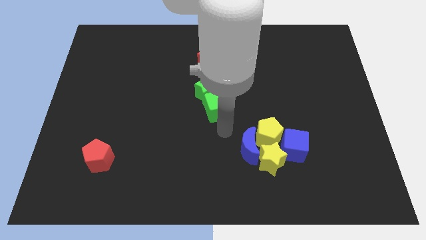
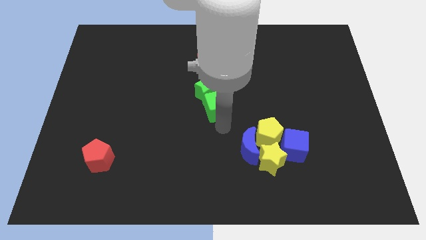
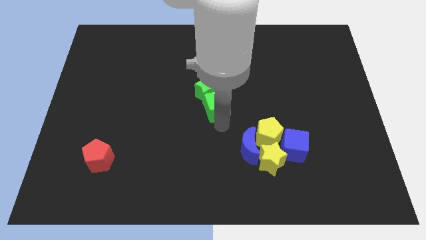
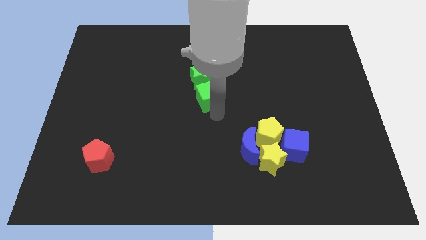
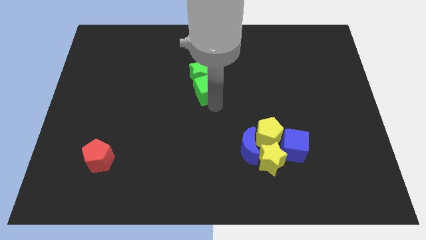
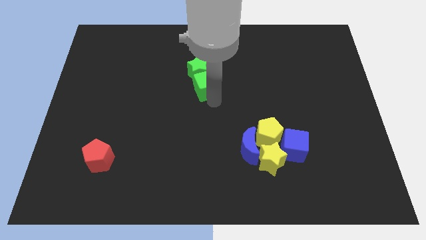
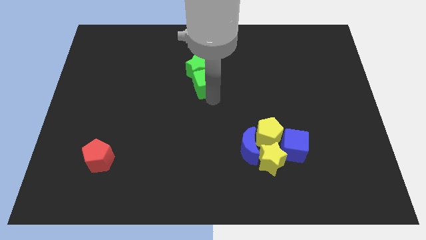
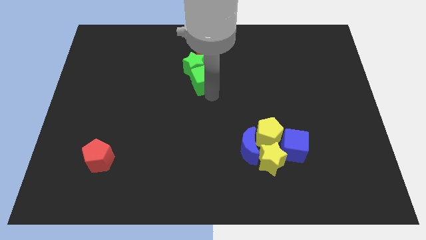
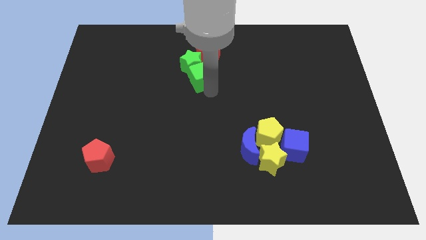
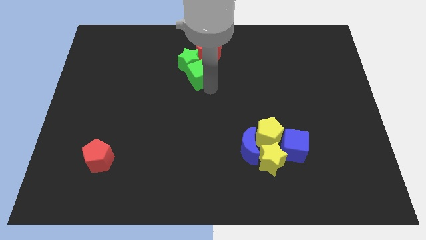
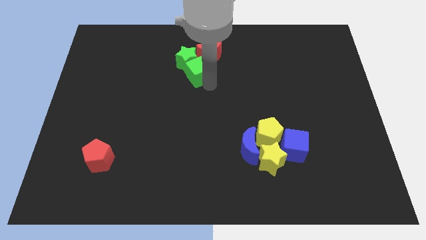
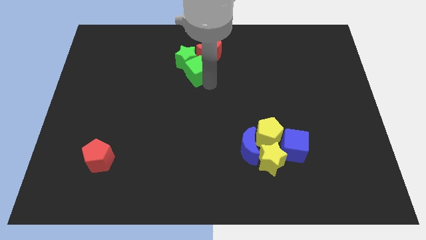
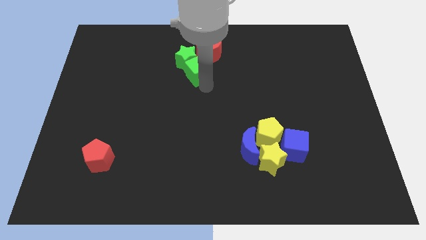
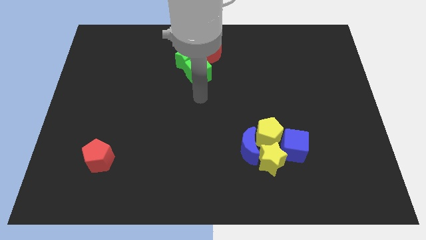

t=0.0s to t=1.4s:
push the green star towards the top center with the green cube

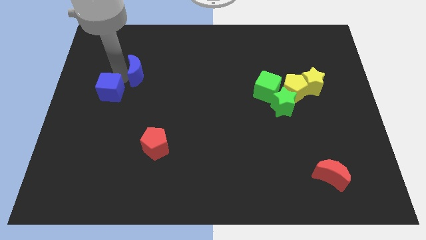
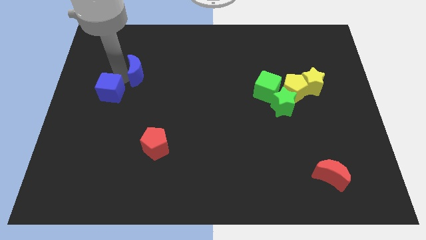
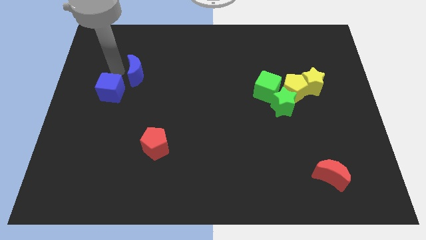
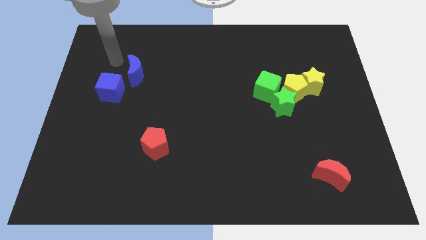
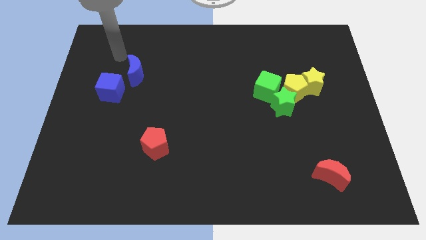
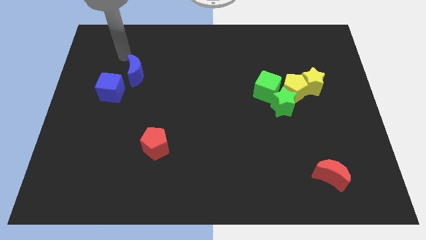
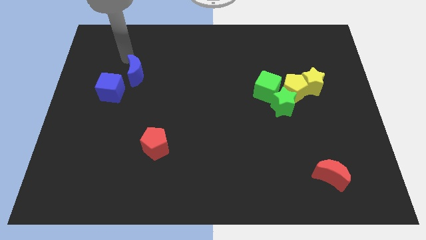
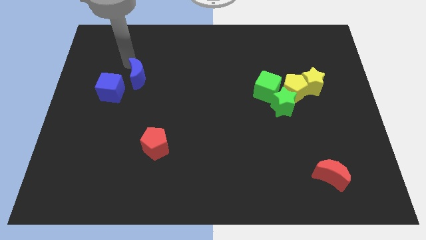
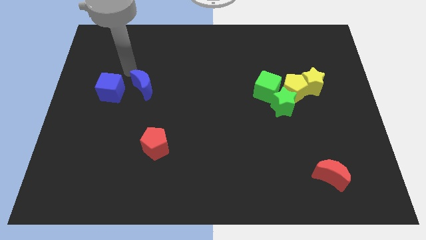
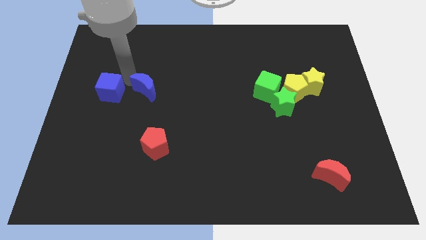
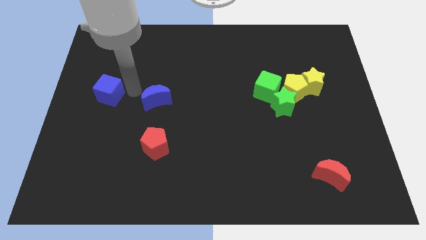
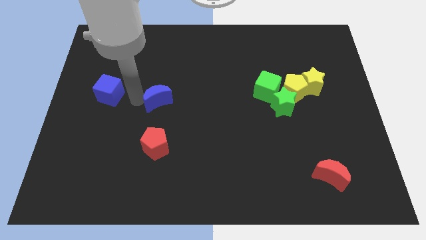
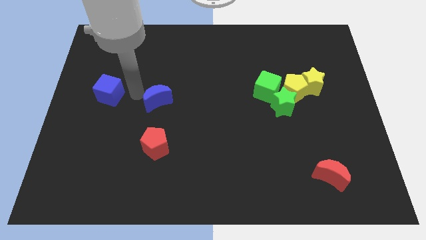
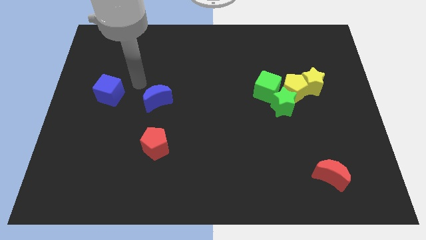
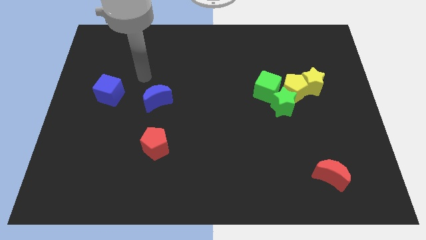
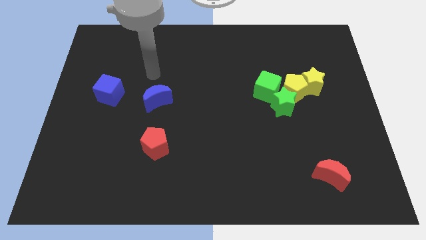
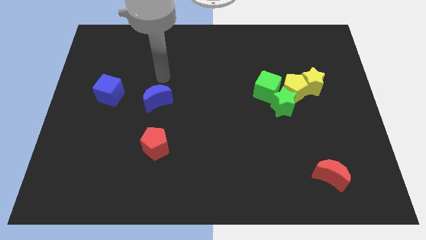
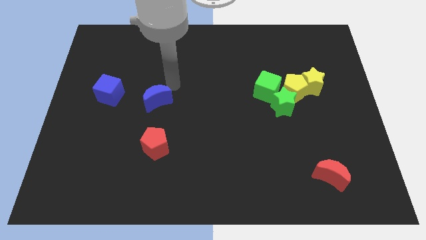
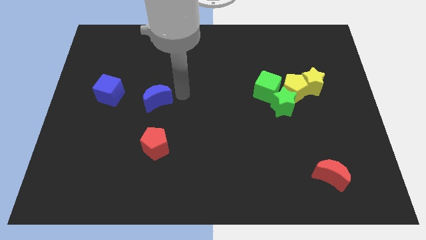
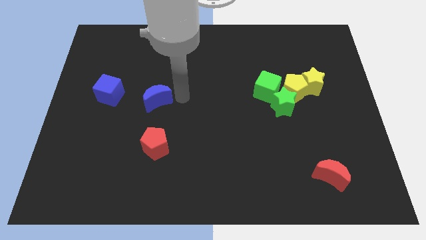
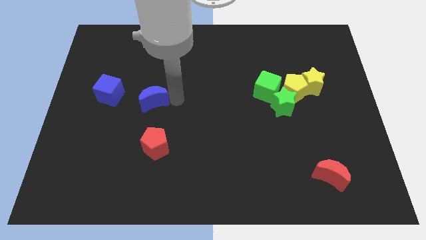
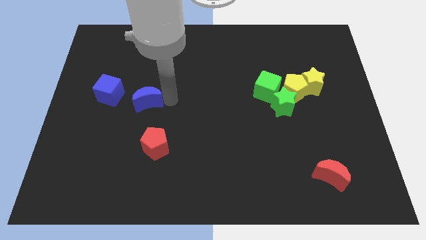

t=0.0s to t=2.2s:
place the blue moon right to the blue cube

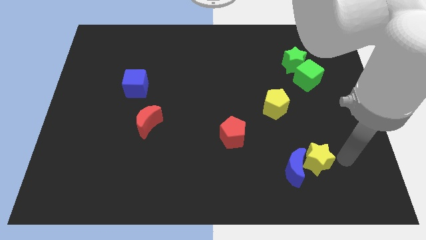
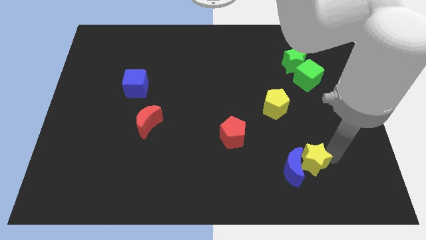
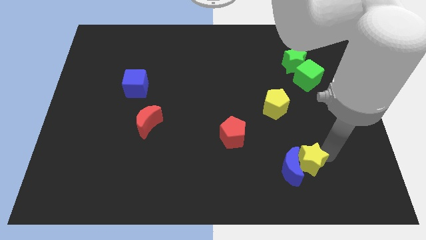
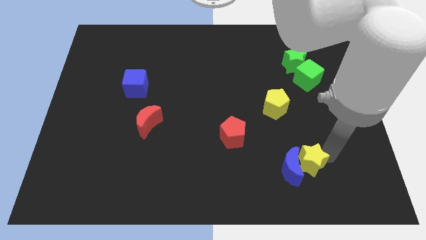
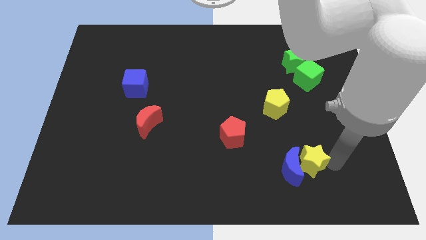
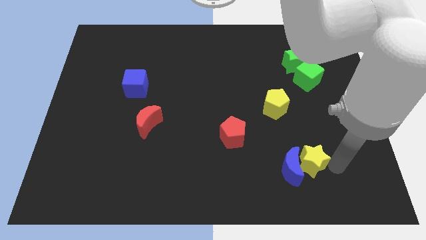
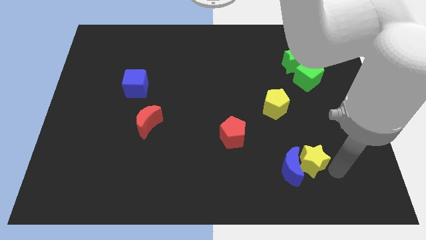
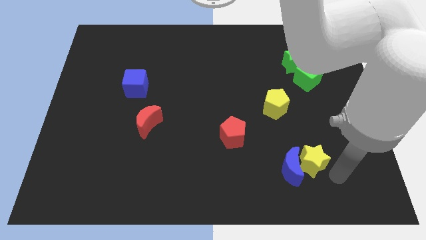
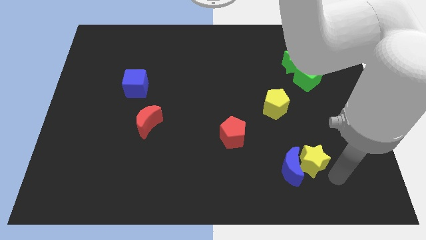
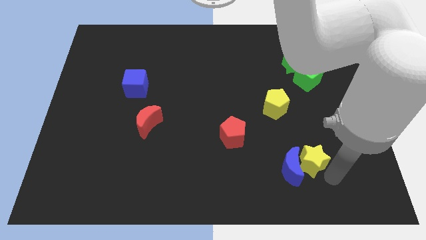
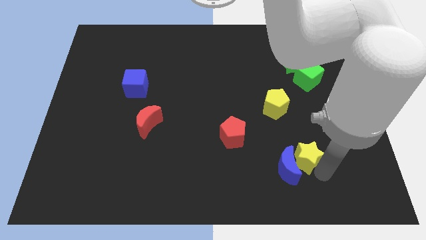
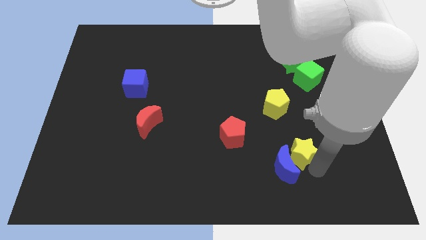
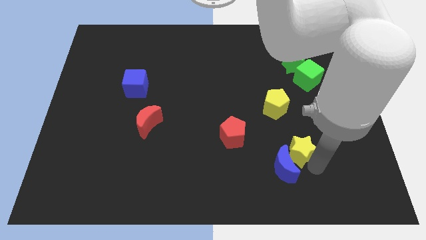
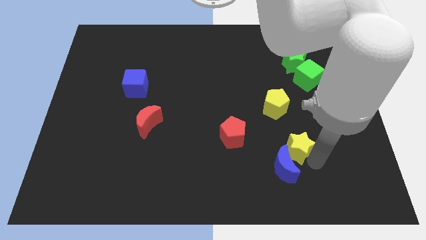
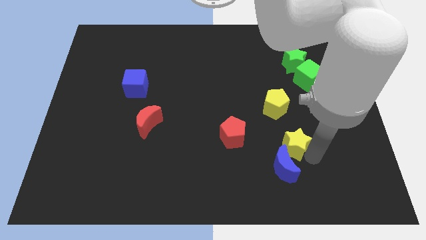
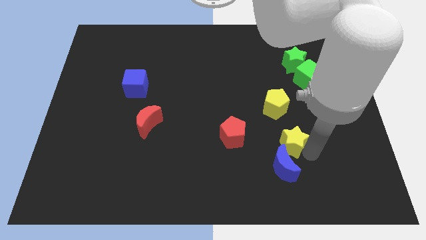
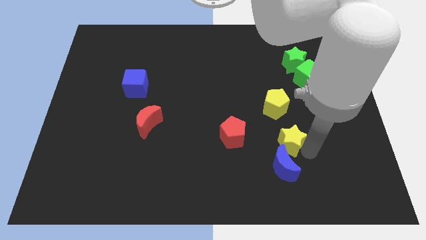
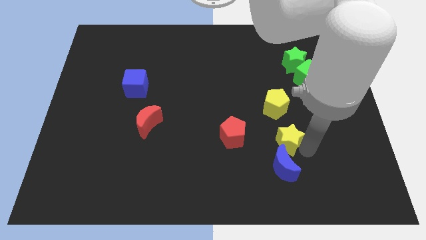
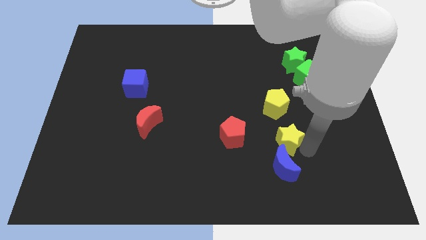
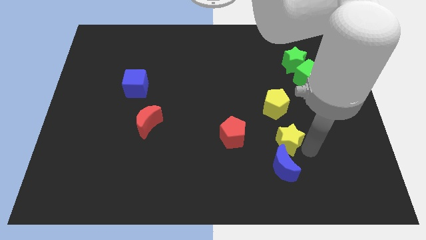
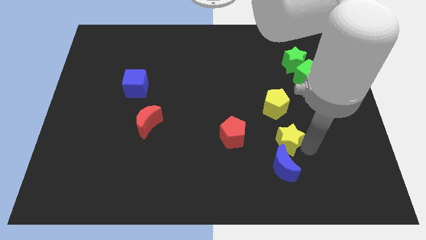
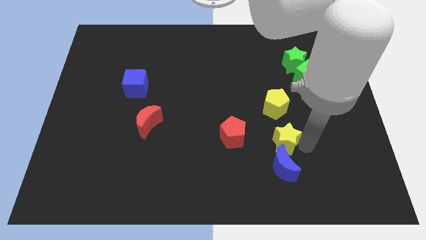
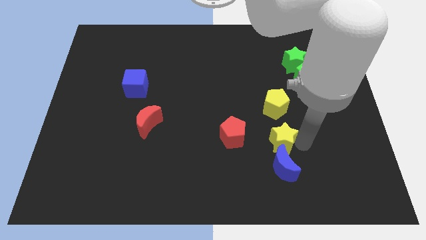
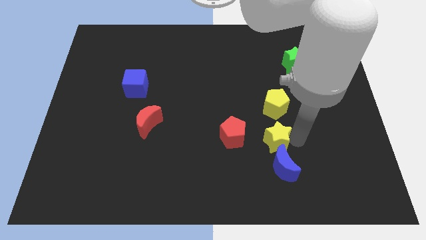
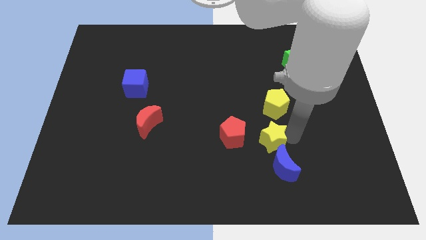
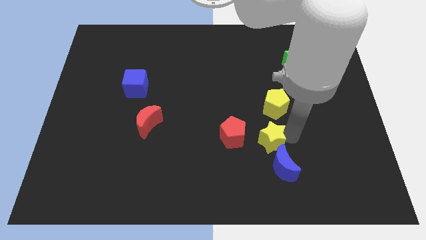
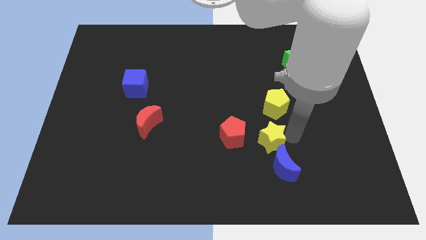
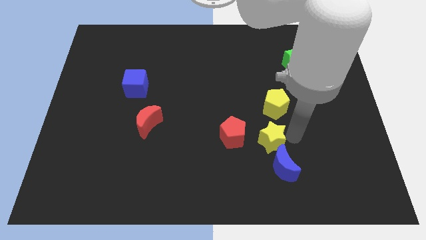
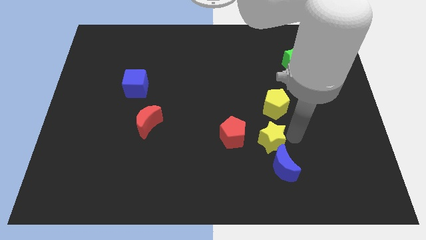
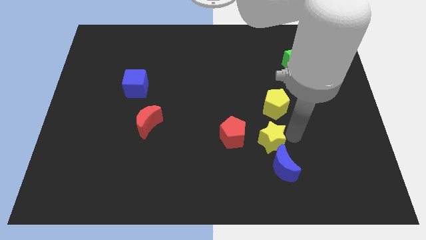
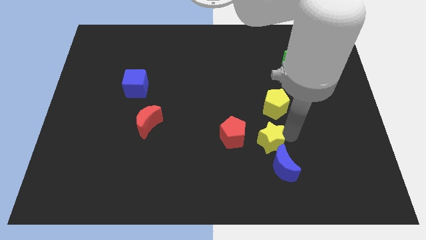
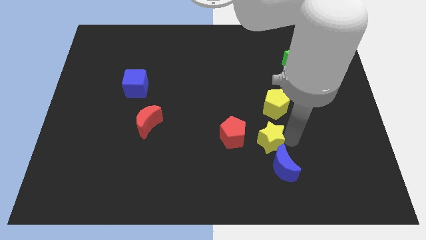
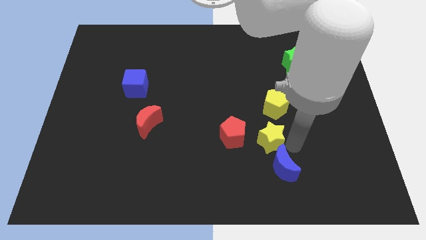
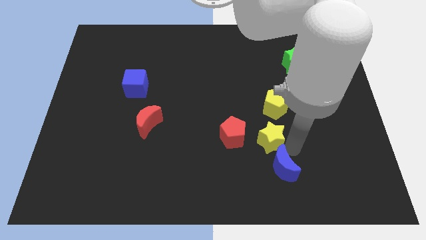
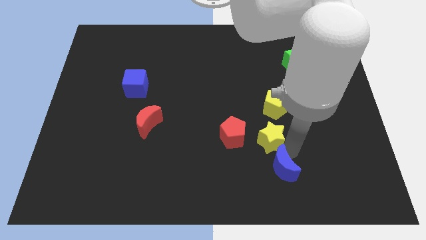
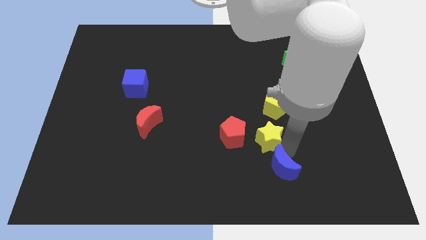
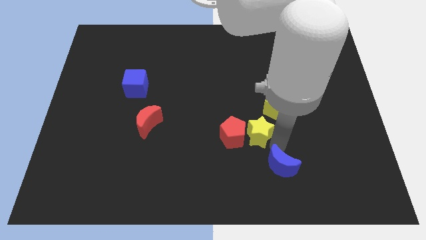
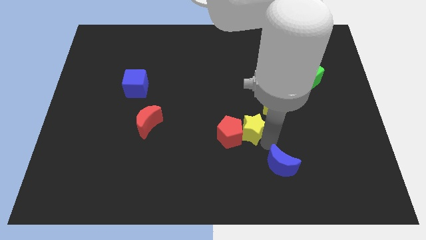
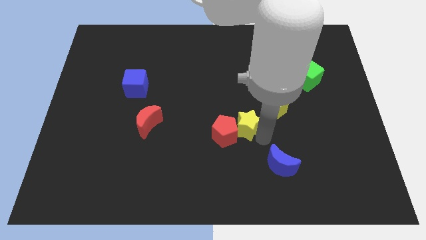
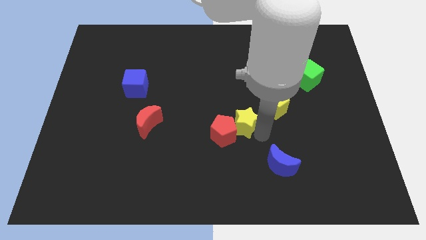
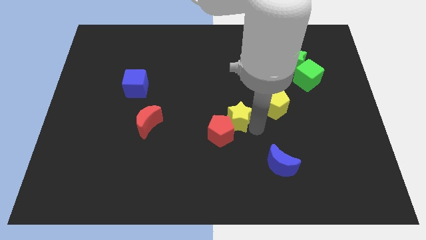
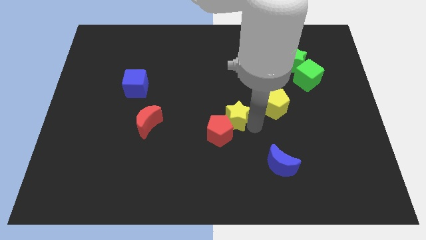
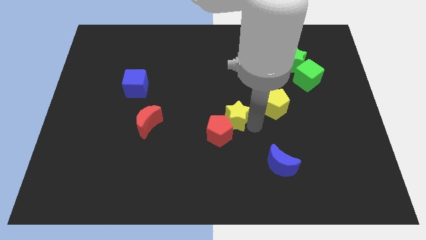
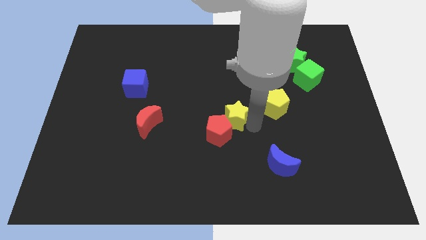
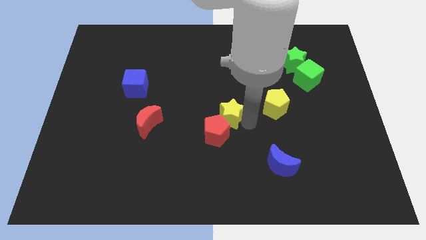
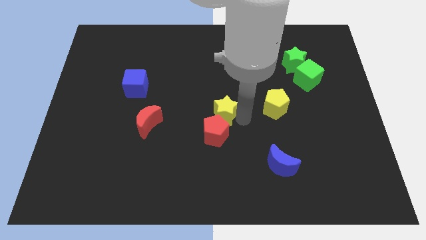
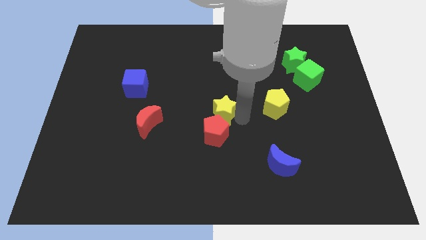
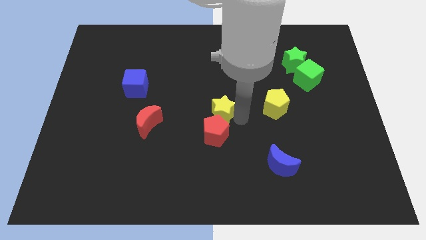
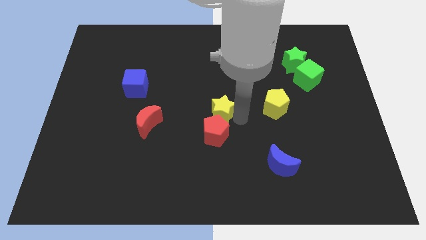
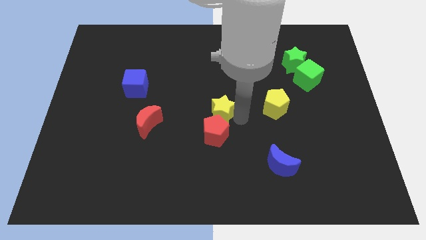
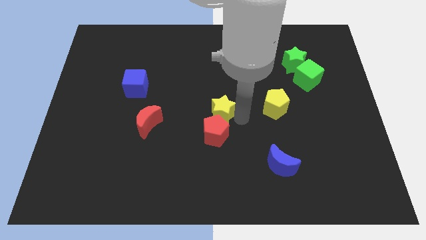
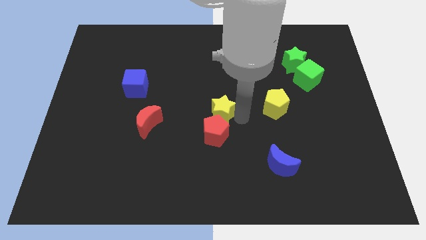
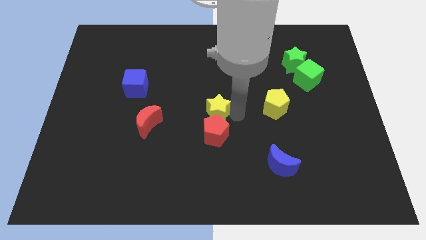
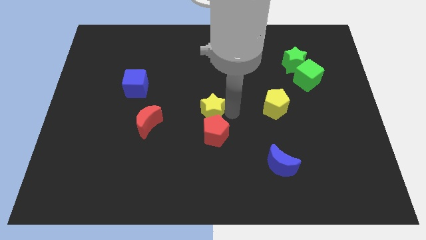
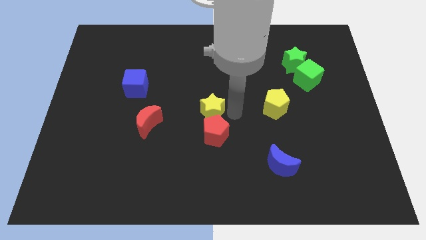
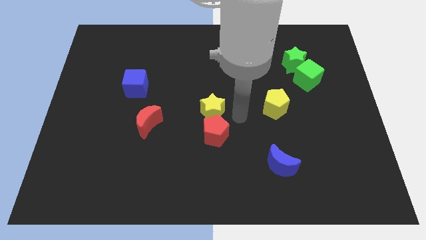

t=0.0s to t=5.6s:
push the yellow star into the red pentagon towards the center of the board
